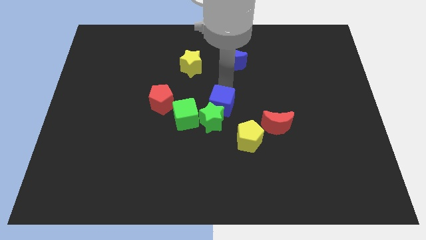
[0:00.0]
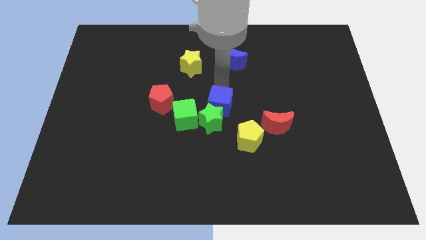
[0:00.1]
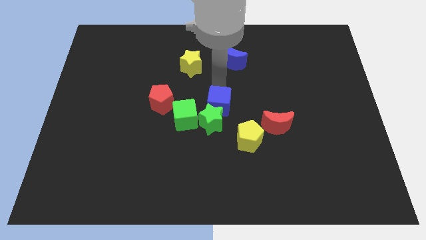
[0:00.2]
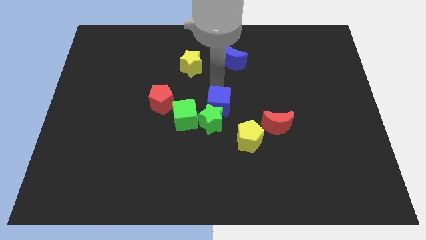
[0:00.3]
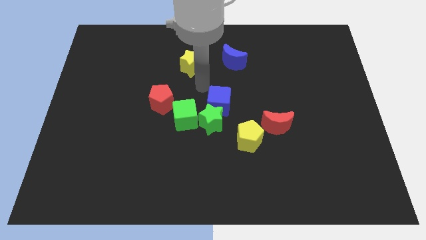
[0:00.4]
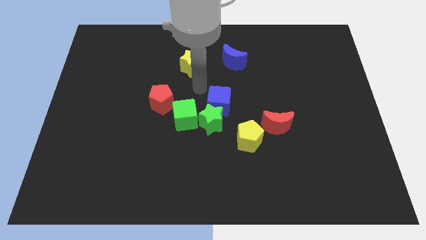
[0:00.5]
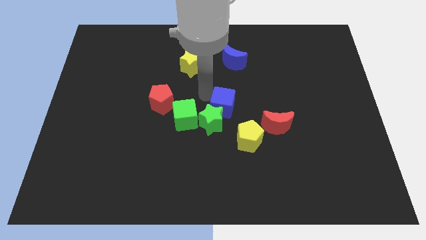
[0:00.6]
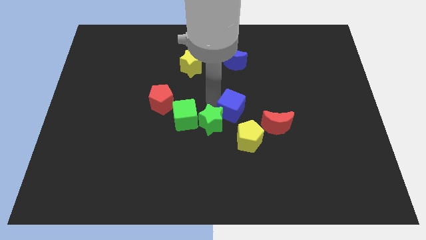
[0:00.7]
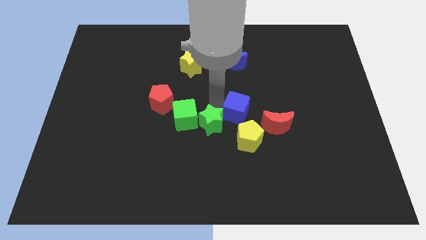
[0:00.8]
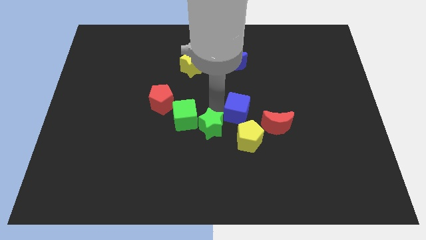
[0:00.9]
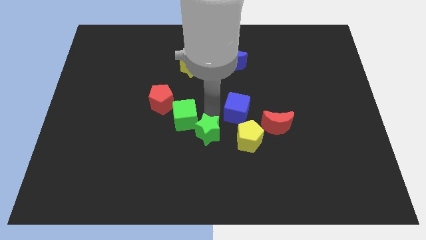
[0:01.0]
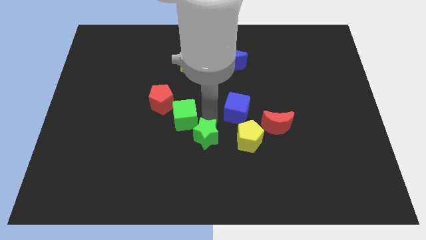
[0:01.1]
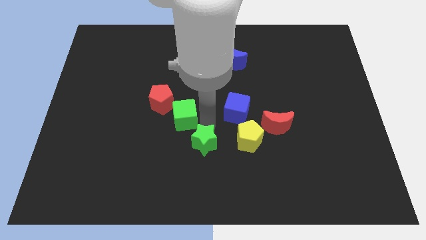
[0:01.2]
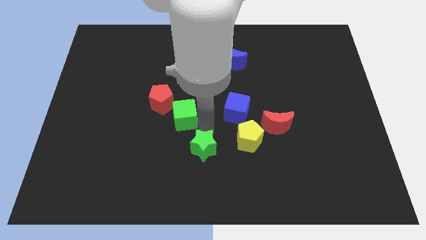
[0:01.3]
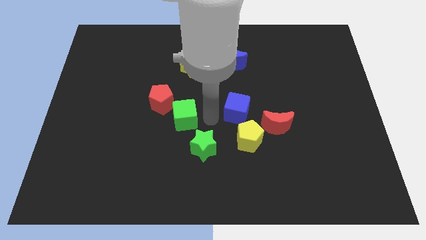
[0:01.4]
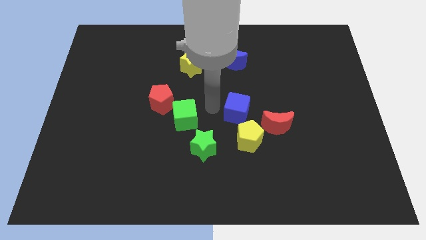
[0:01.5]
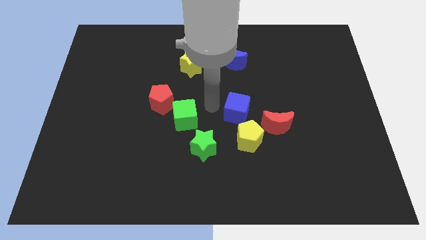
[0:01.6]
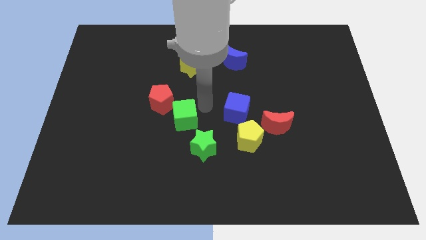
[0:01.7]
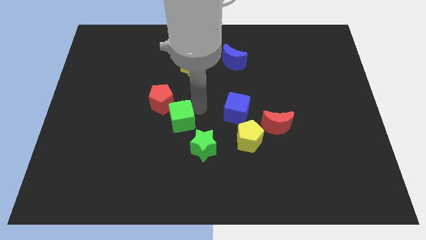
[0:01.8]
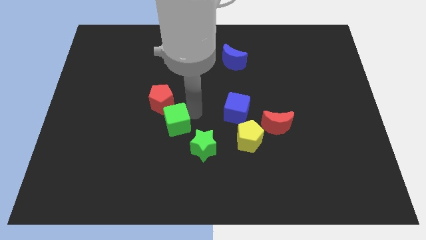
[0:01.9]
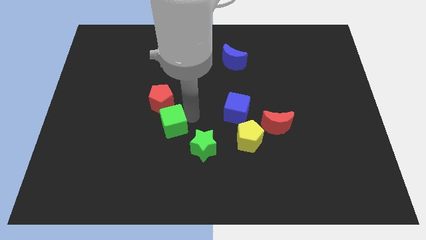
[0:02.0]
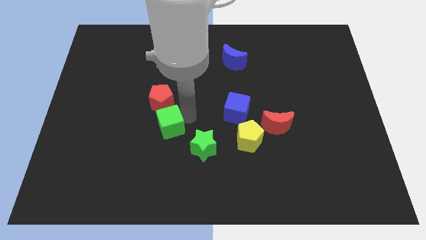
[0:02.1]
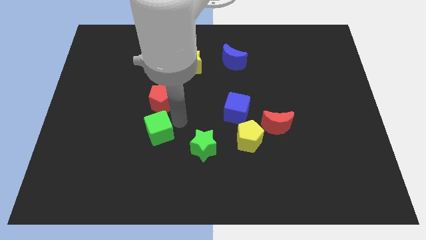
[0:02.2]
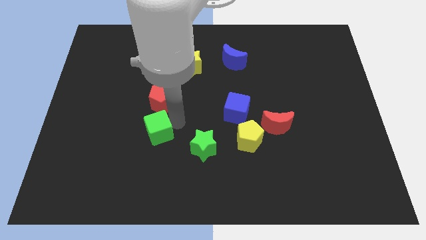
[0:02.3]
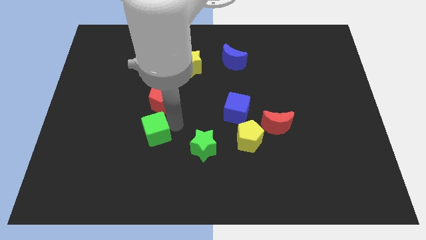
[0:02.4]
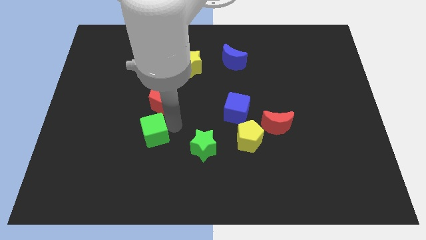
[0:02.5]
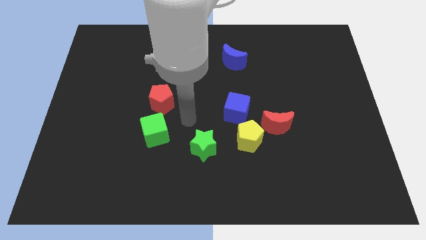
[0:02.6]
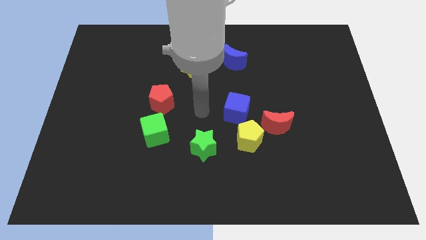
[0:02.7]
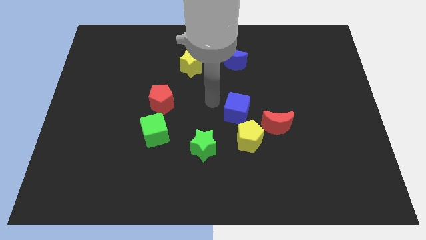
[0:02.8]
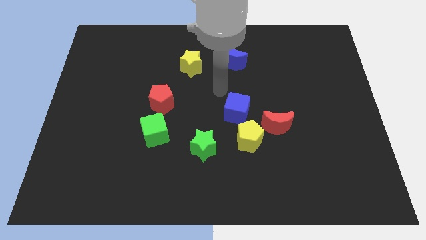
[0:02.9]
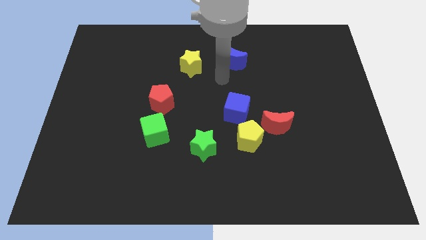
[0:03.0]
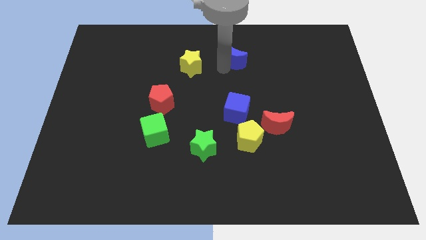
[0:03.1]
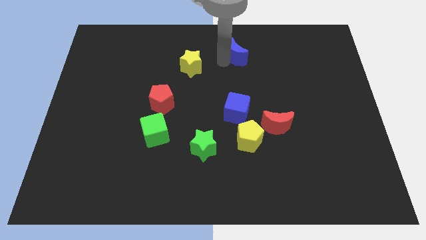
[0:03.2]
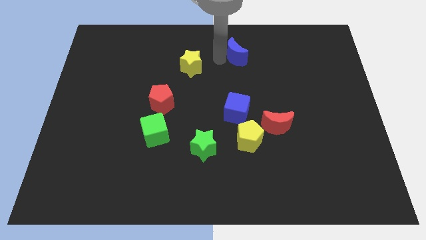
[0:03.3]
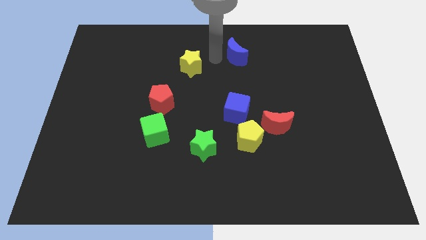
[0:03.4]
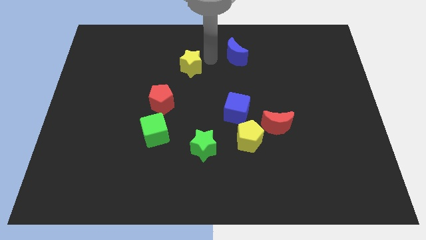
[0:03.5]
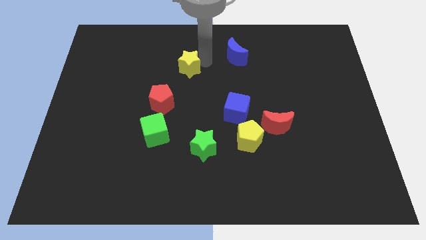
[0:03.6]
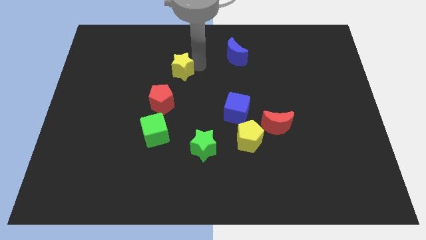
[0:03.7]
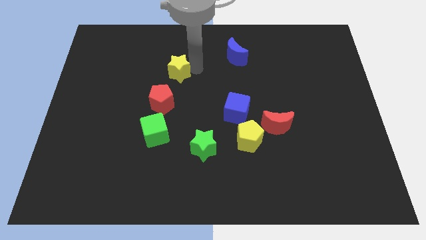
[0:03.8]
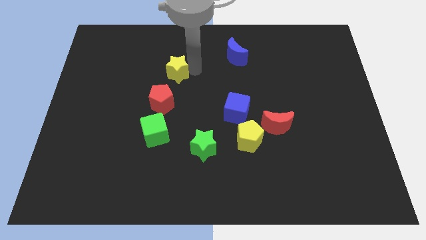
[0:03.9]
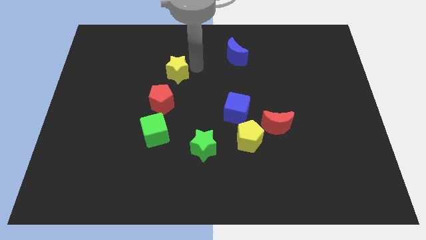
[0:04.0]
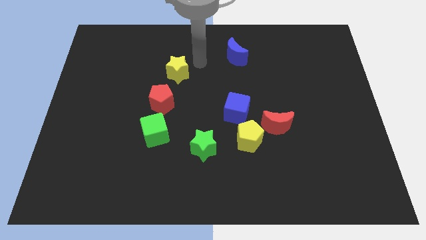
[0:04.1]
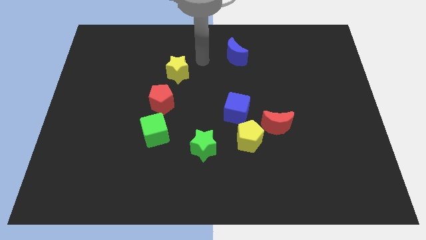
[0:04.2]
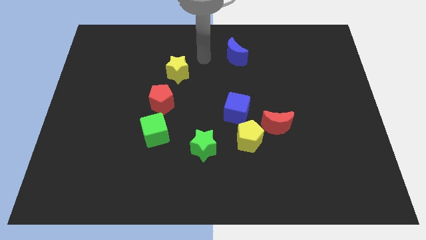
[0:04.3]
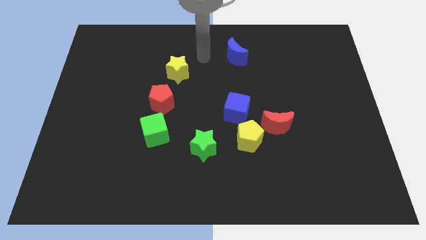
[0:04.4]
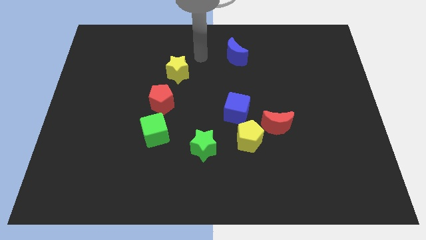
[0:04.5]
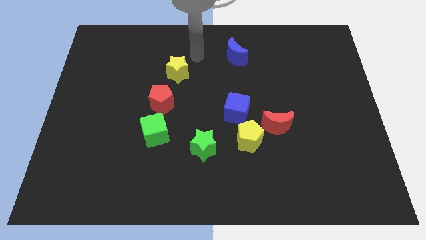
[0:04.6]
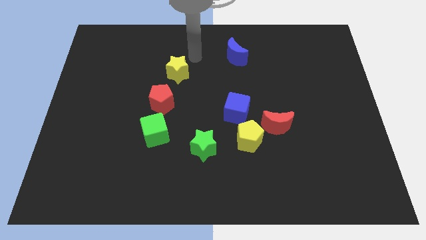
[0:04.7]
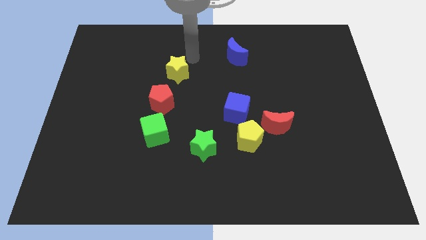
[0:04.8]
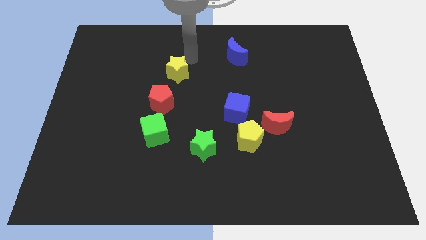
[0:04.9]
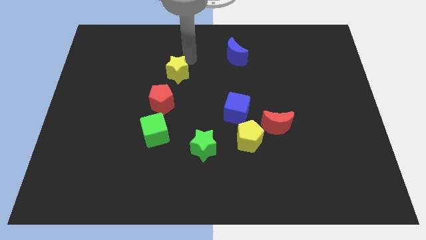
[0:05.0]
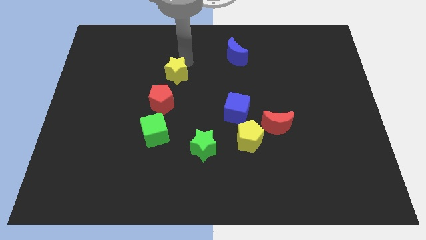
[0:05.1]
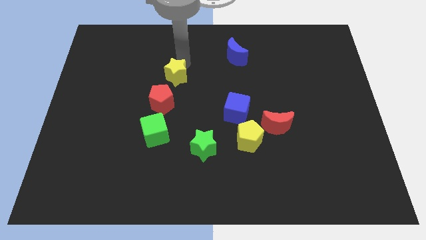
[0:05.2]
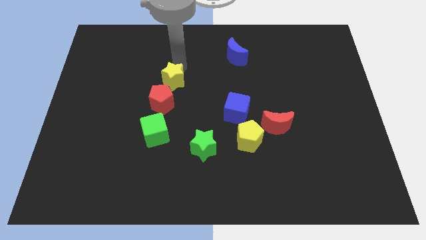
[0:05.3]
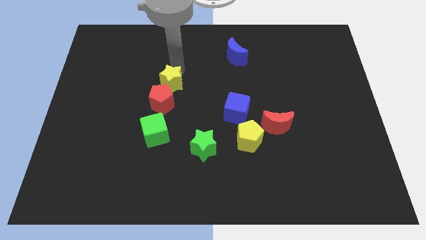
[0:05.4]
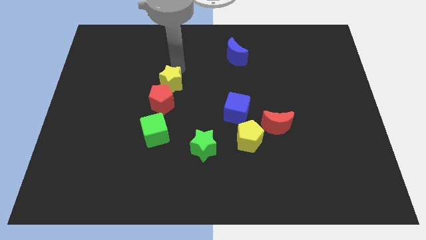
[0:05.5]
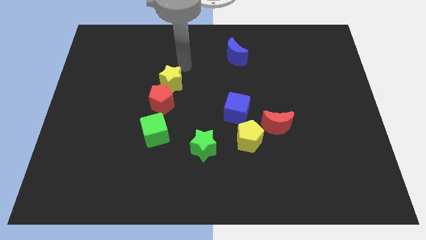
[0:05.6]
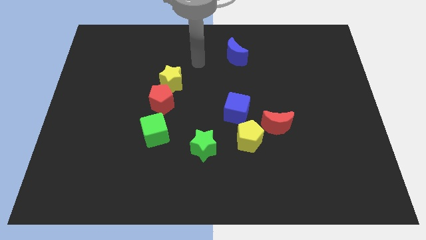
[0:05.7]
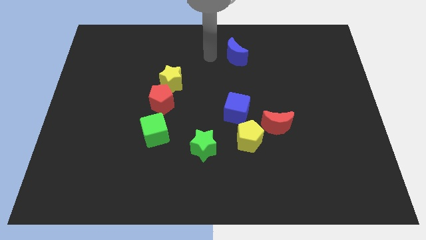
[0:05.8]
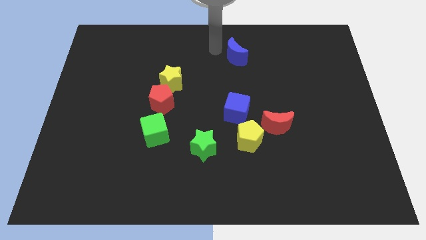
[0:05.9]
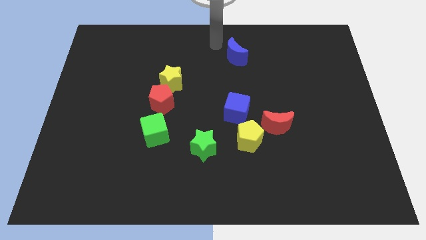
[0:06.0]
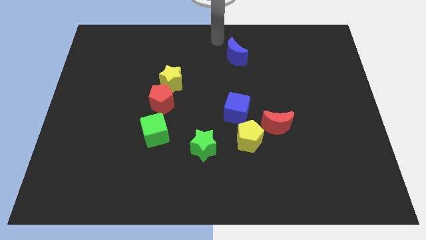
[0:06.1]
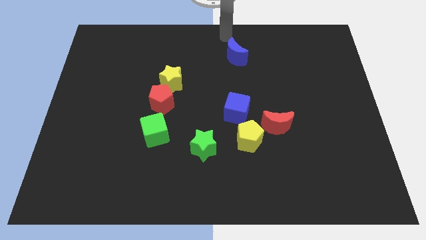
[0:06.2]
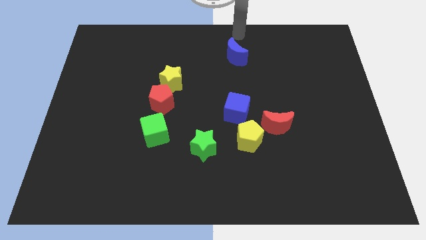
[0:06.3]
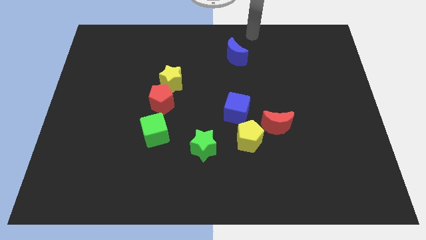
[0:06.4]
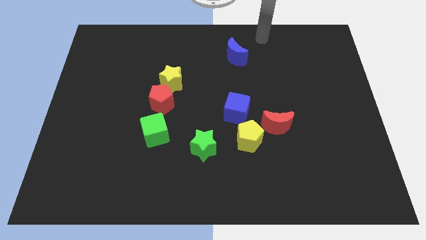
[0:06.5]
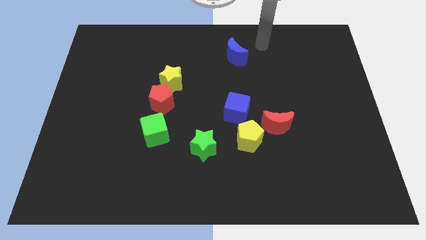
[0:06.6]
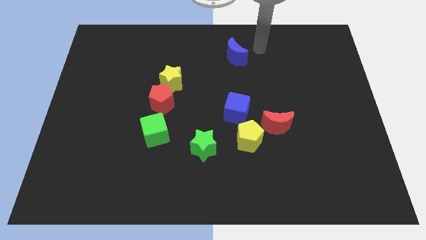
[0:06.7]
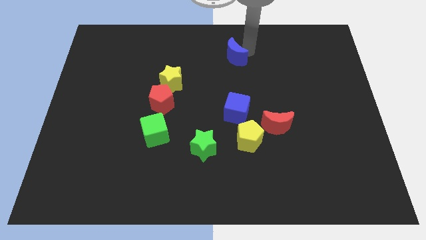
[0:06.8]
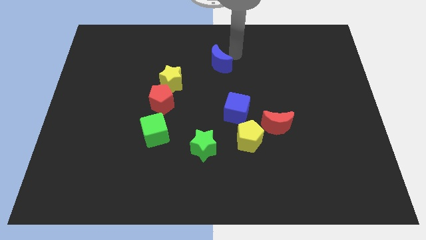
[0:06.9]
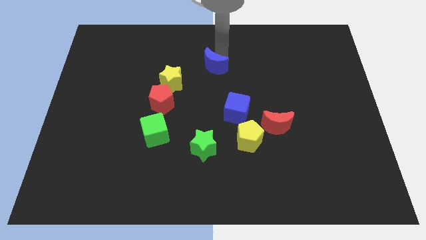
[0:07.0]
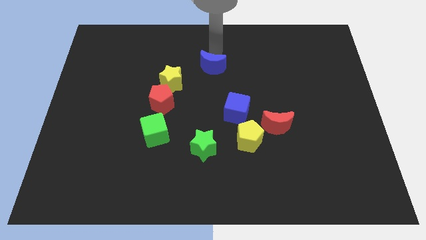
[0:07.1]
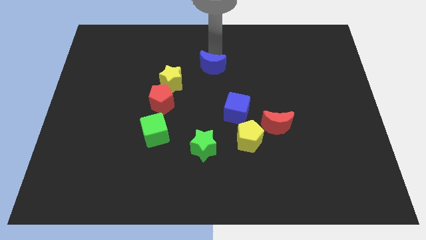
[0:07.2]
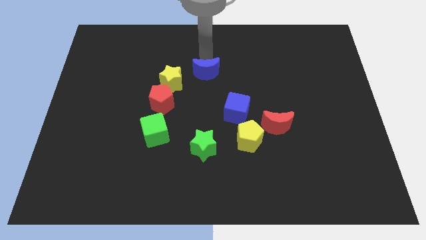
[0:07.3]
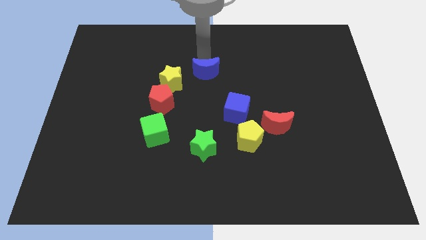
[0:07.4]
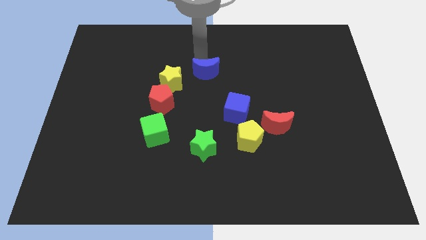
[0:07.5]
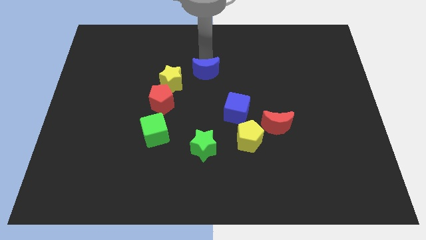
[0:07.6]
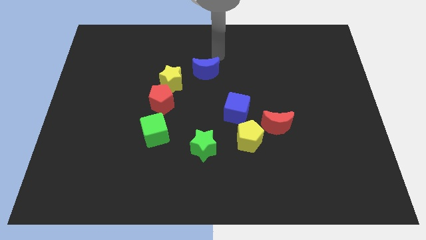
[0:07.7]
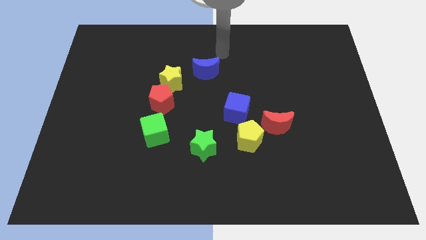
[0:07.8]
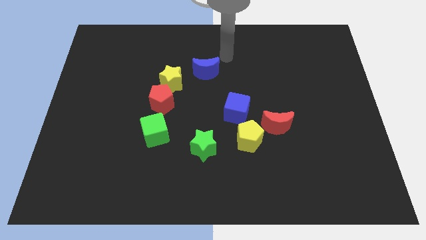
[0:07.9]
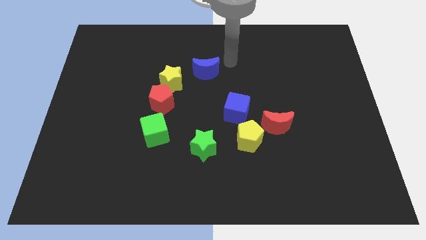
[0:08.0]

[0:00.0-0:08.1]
separate the all blocks from the center of the board

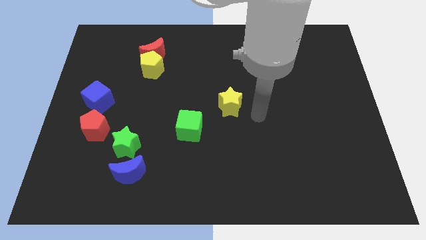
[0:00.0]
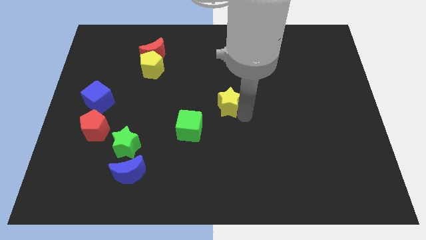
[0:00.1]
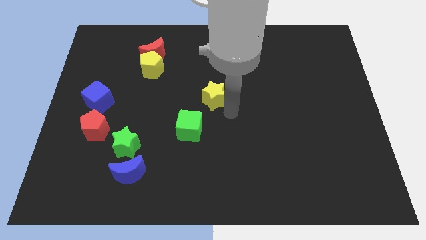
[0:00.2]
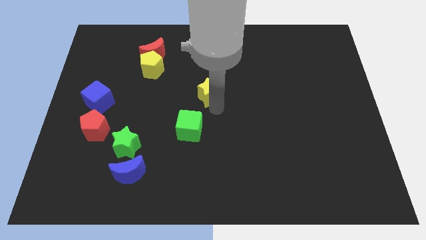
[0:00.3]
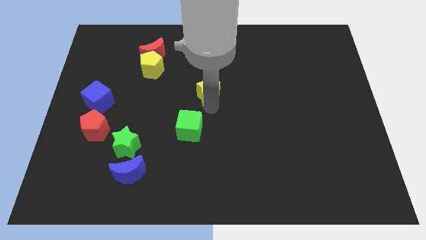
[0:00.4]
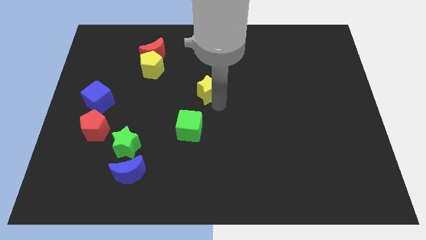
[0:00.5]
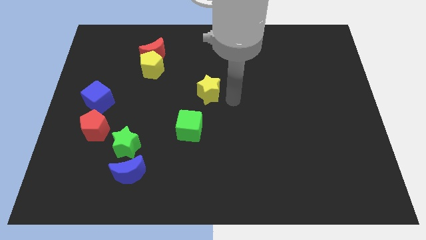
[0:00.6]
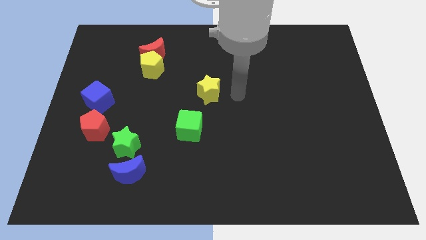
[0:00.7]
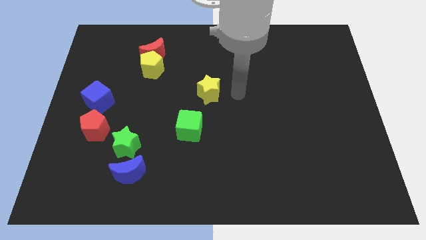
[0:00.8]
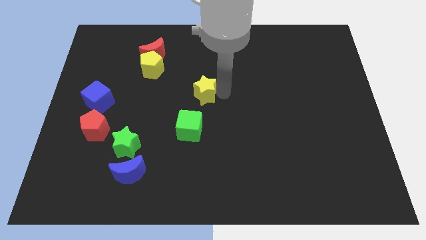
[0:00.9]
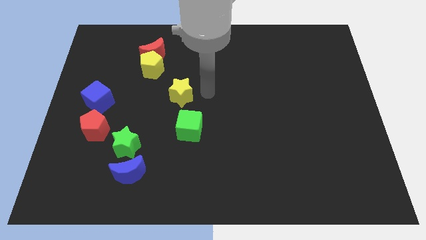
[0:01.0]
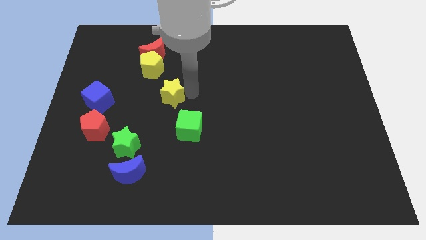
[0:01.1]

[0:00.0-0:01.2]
place yellow star above to the green cube
